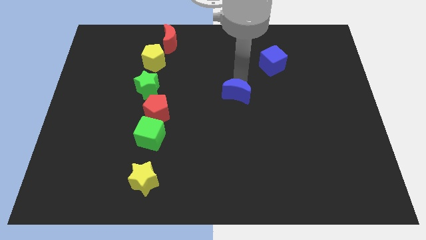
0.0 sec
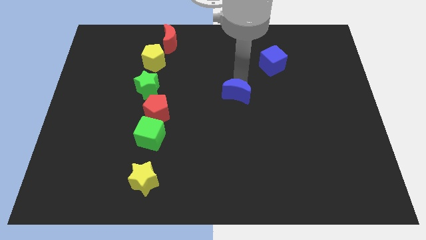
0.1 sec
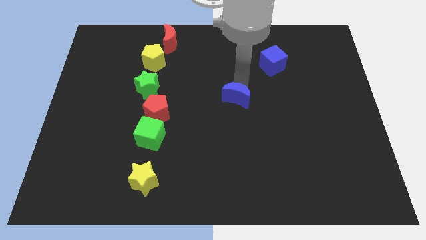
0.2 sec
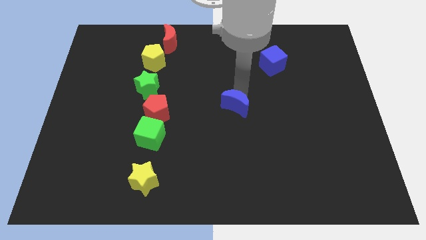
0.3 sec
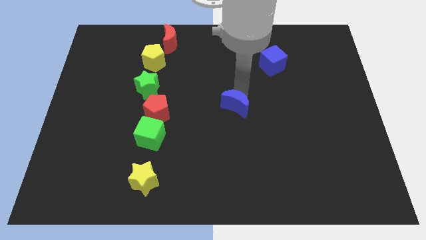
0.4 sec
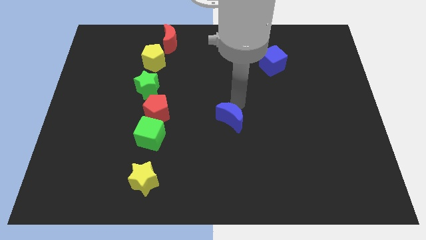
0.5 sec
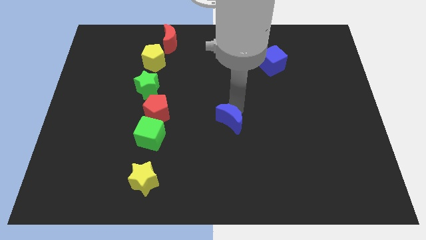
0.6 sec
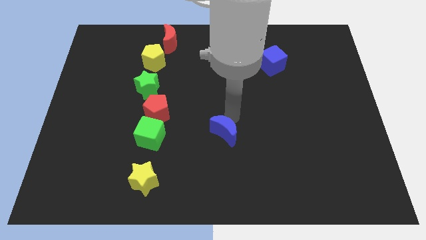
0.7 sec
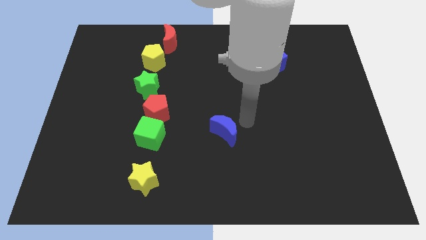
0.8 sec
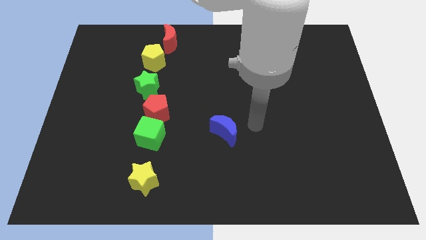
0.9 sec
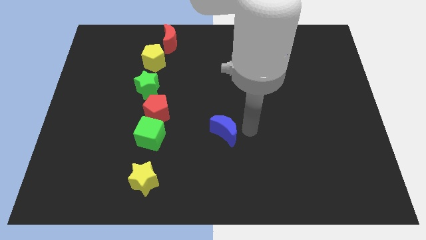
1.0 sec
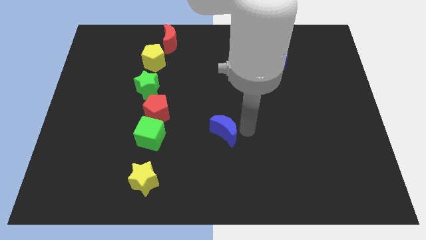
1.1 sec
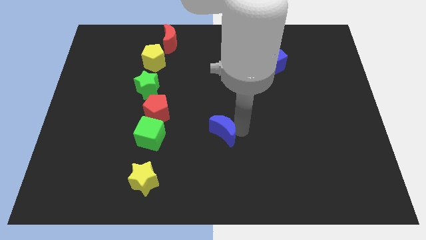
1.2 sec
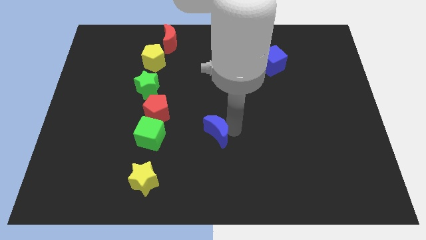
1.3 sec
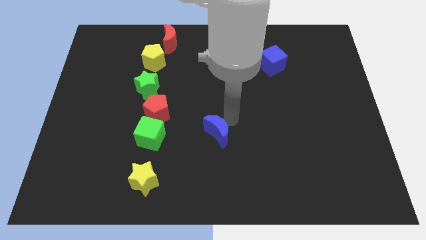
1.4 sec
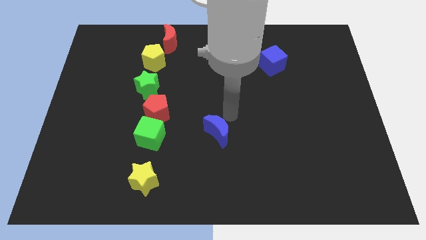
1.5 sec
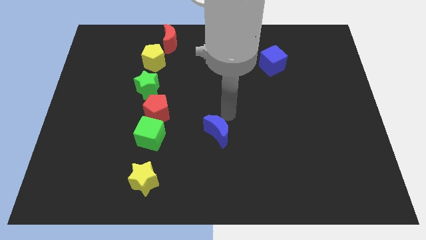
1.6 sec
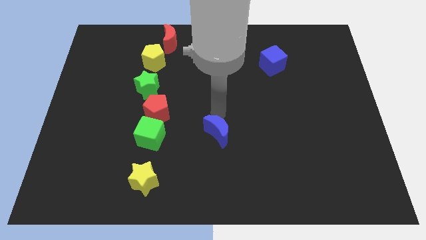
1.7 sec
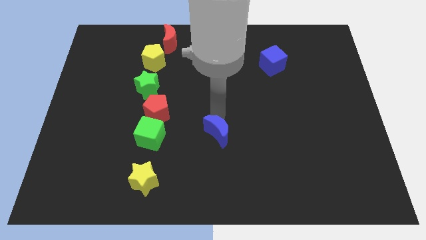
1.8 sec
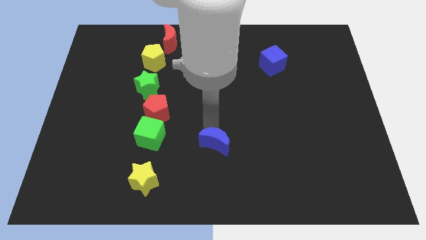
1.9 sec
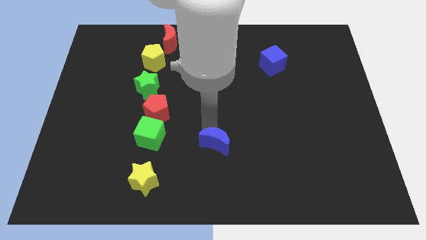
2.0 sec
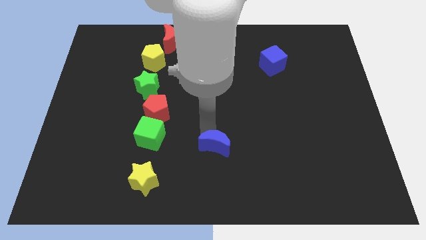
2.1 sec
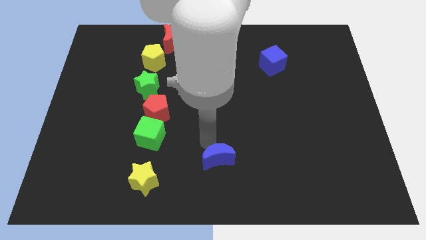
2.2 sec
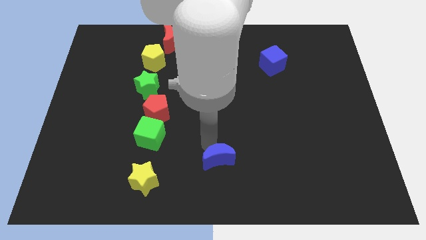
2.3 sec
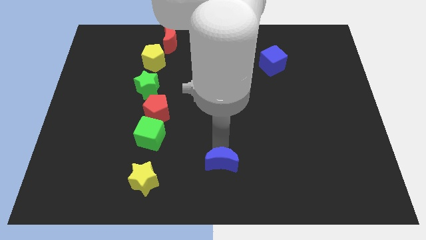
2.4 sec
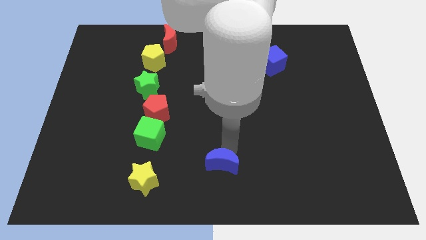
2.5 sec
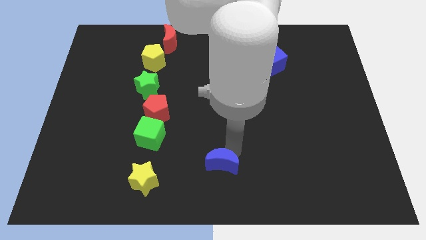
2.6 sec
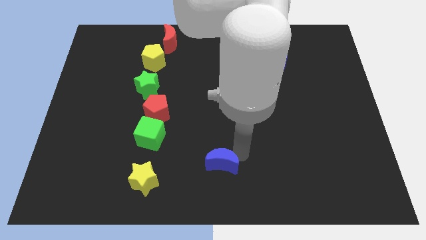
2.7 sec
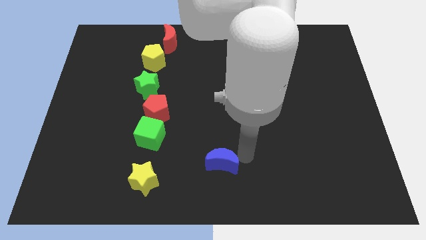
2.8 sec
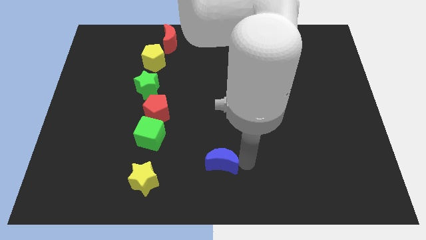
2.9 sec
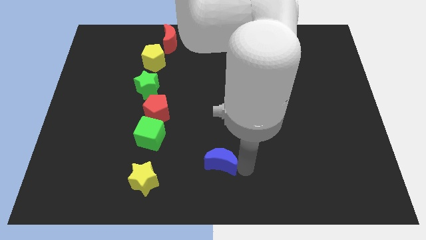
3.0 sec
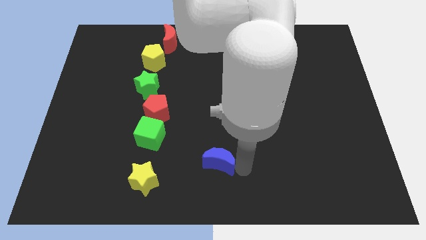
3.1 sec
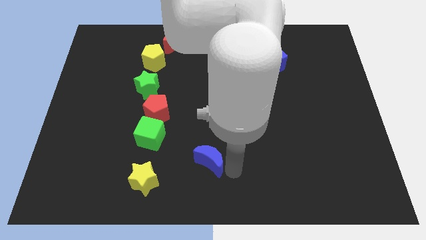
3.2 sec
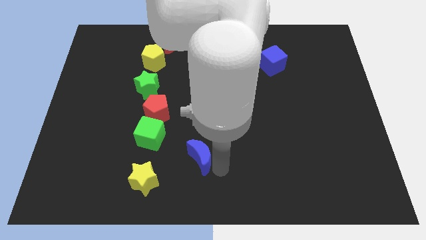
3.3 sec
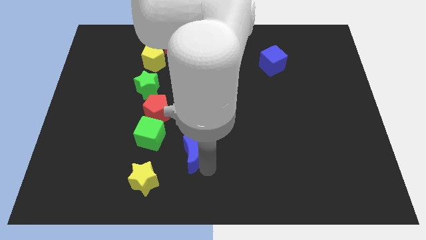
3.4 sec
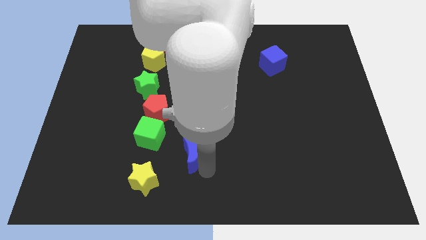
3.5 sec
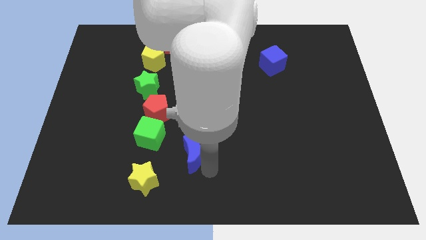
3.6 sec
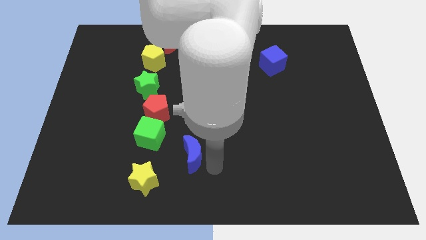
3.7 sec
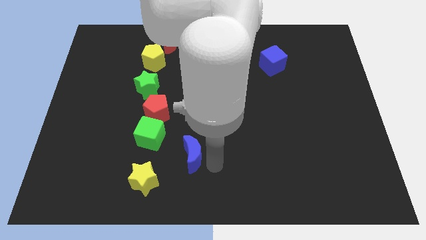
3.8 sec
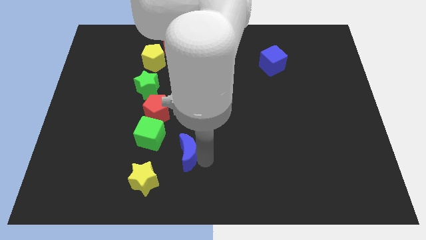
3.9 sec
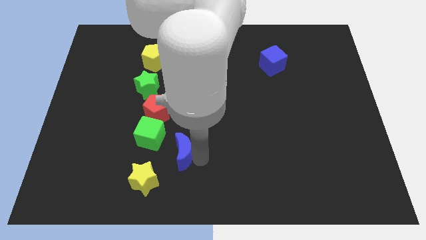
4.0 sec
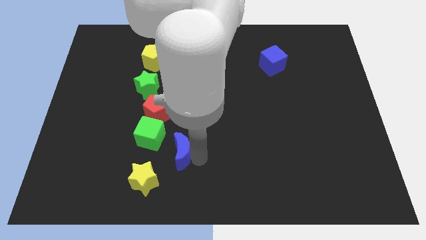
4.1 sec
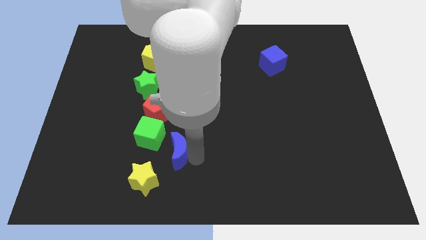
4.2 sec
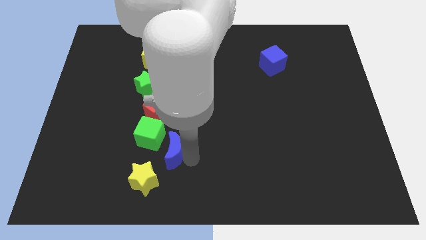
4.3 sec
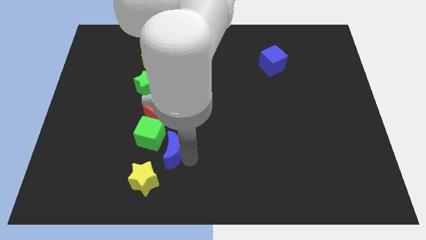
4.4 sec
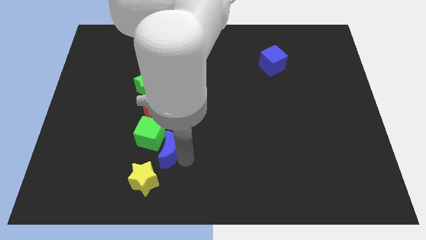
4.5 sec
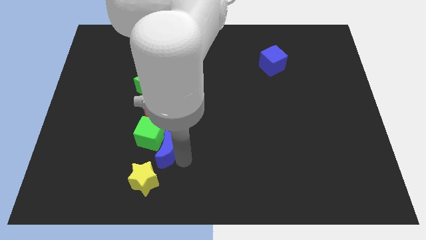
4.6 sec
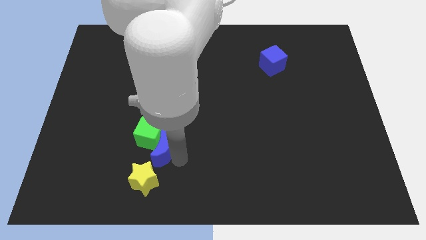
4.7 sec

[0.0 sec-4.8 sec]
move the blue crescent to the top right of the yellow star

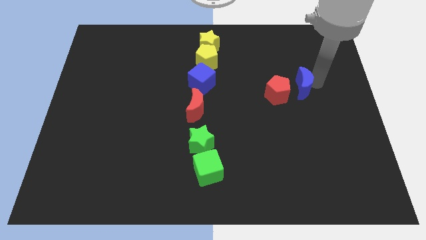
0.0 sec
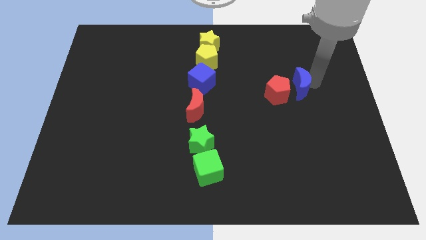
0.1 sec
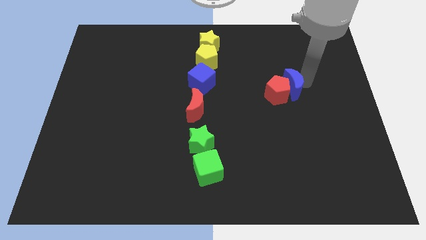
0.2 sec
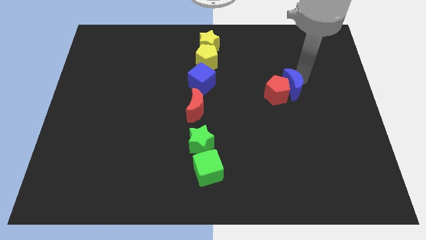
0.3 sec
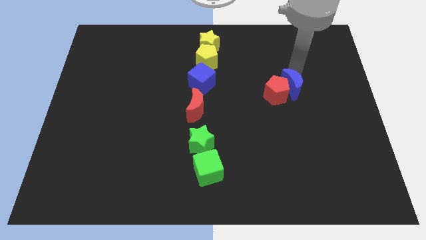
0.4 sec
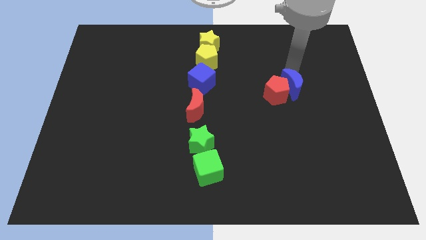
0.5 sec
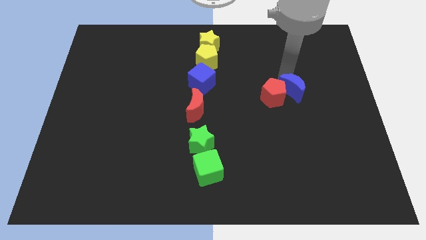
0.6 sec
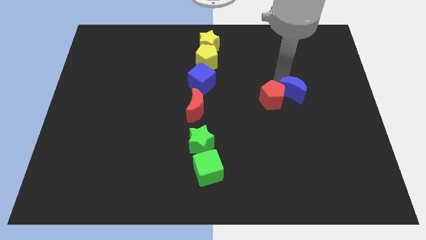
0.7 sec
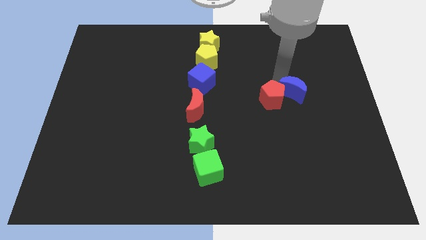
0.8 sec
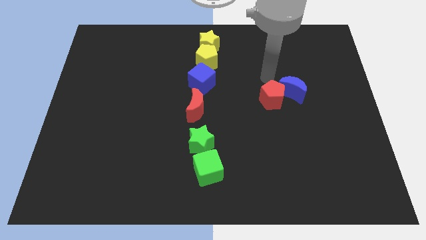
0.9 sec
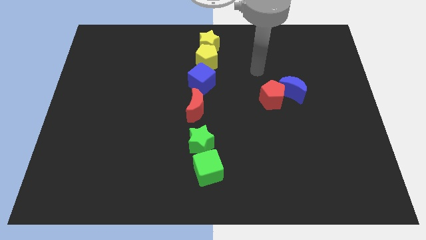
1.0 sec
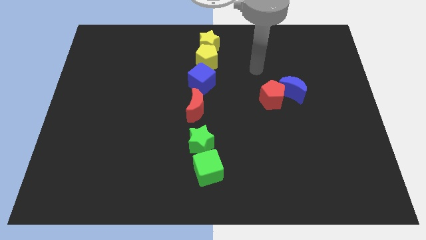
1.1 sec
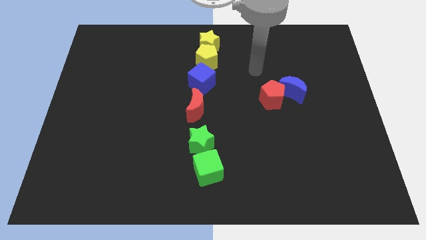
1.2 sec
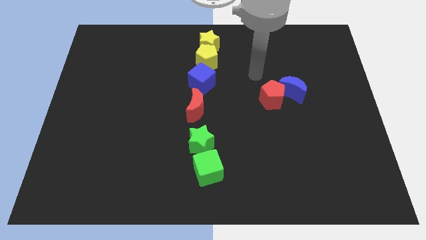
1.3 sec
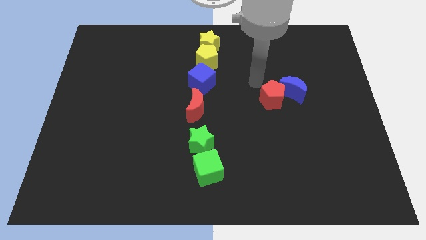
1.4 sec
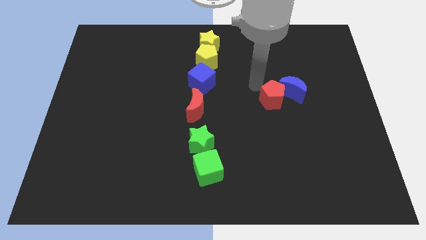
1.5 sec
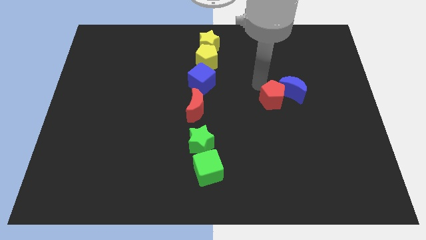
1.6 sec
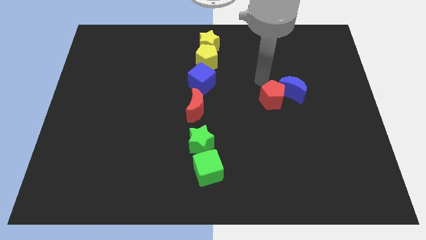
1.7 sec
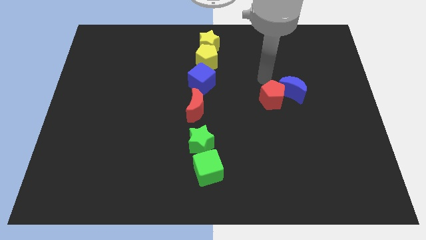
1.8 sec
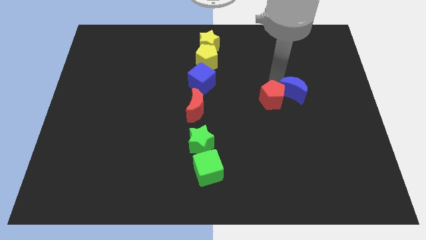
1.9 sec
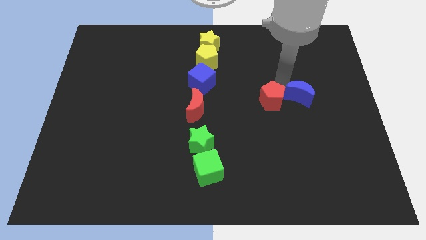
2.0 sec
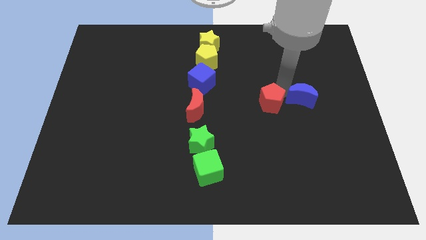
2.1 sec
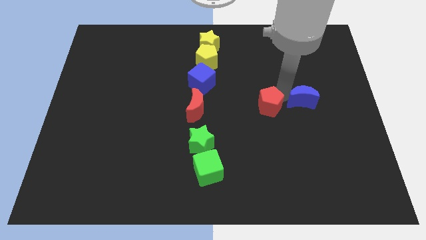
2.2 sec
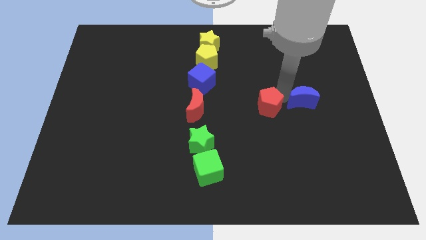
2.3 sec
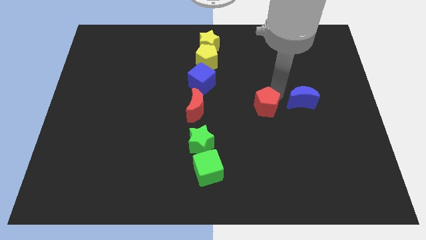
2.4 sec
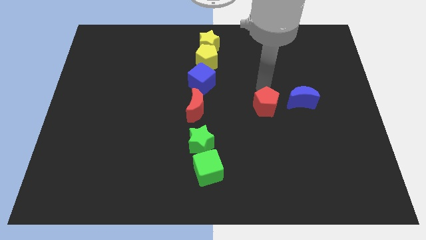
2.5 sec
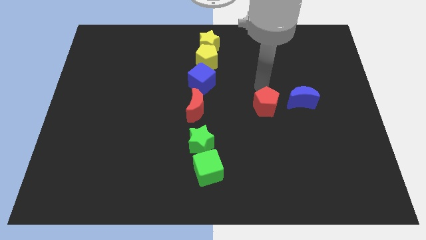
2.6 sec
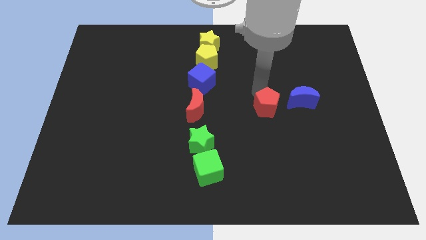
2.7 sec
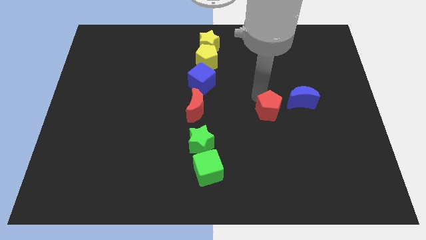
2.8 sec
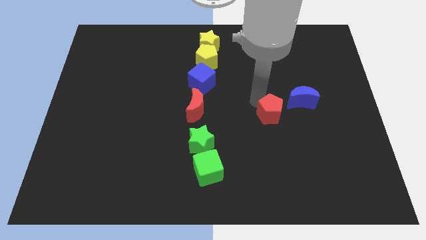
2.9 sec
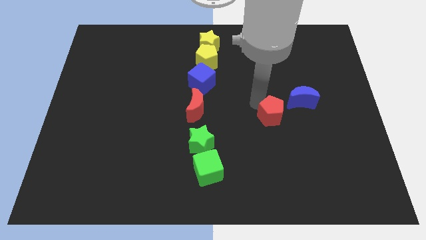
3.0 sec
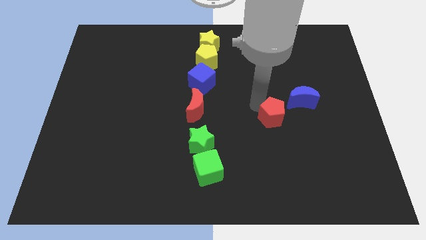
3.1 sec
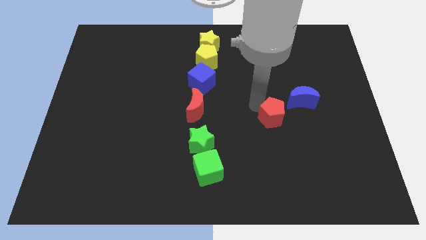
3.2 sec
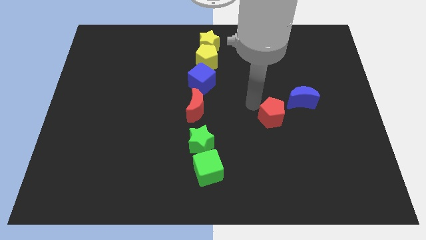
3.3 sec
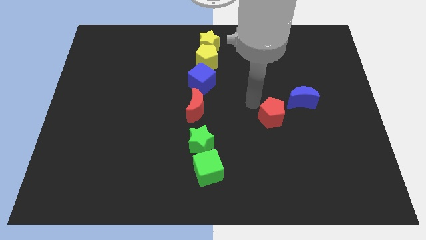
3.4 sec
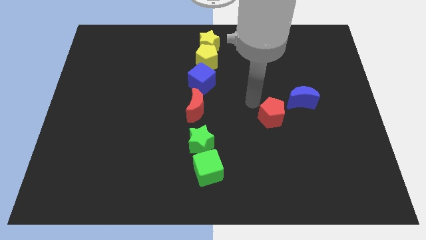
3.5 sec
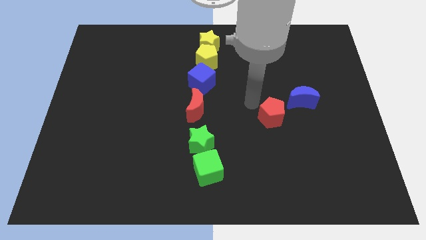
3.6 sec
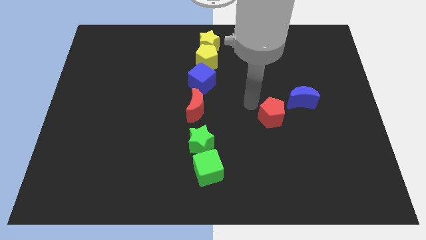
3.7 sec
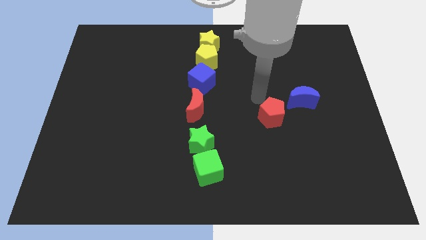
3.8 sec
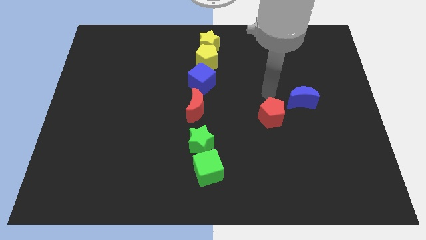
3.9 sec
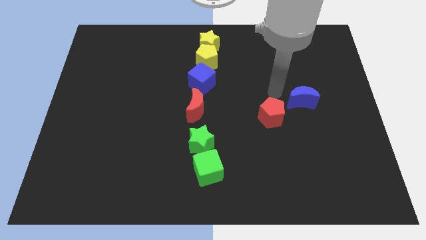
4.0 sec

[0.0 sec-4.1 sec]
move the red pentagon diagonally bottom right to the blue cube
